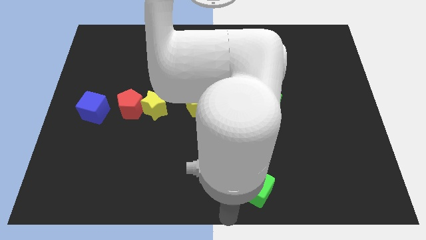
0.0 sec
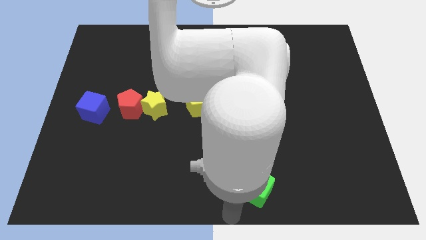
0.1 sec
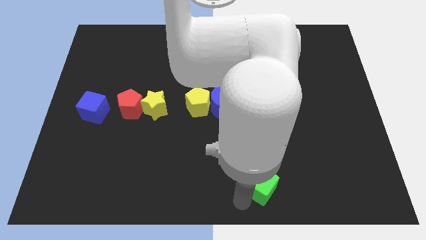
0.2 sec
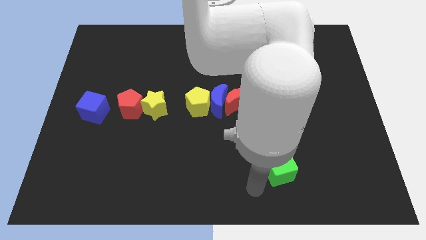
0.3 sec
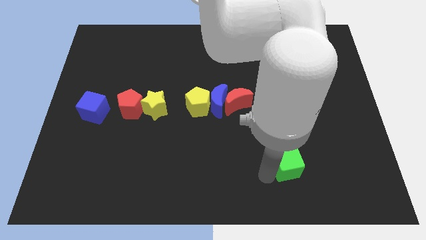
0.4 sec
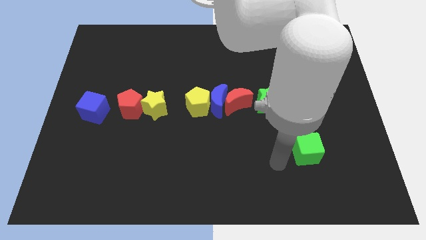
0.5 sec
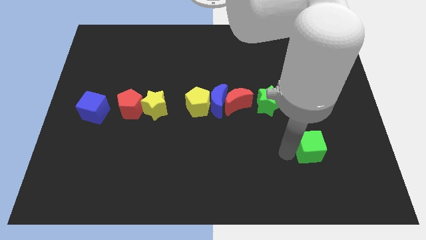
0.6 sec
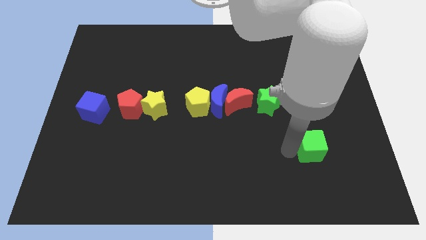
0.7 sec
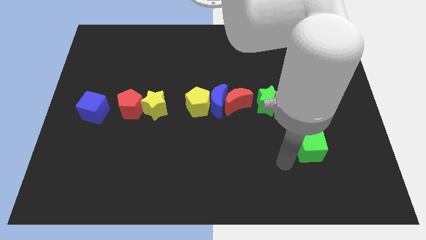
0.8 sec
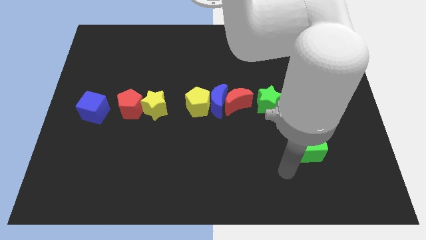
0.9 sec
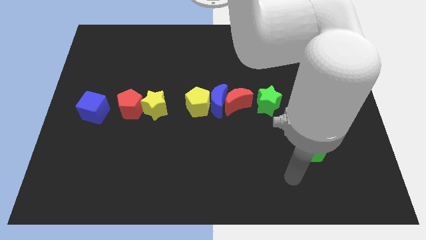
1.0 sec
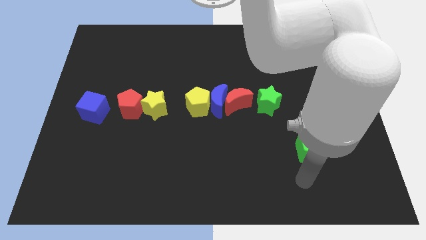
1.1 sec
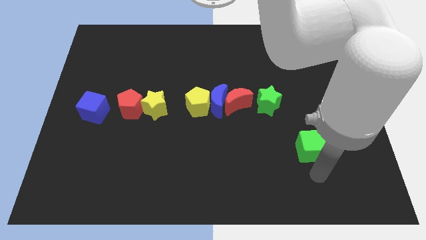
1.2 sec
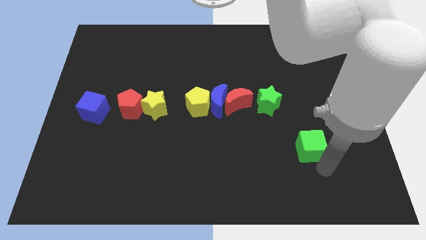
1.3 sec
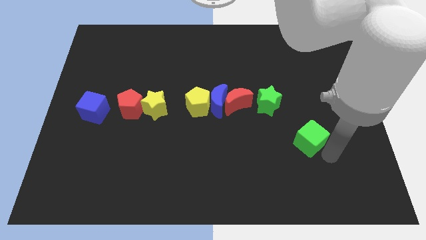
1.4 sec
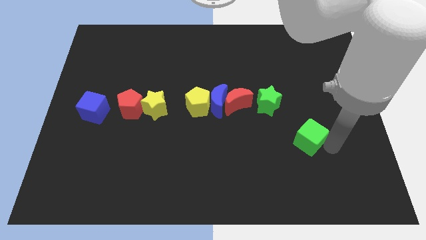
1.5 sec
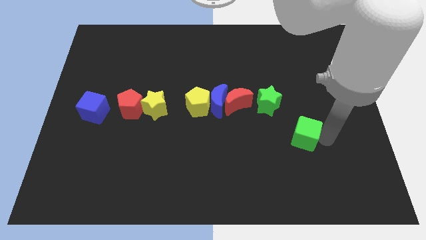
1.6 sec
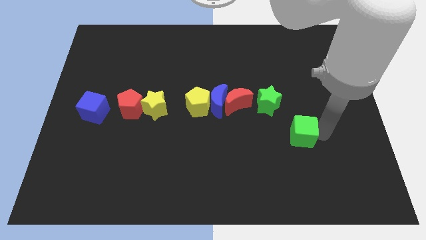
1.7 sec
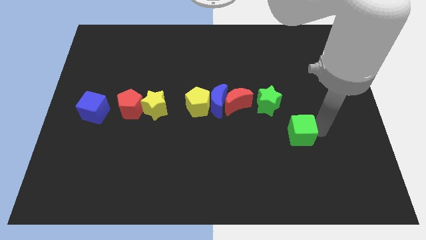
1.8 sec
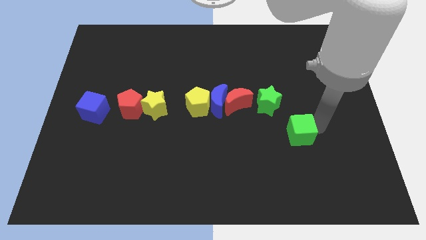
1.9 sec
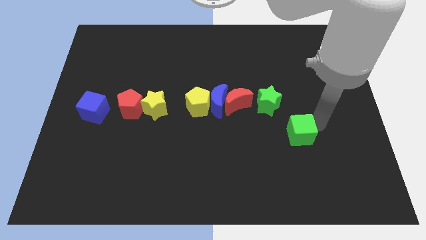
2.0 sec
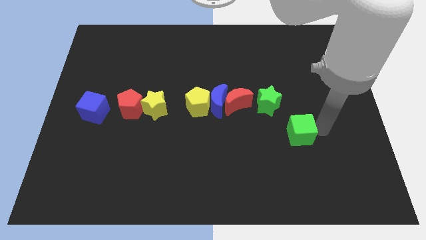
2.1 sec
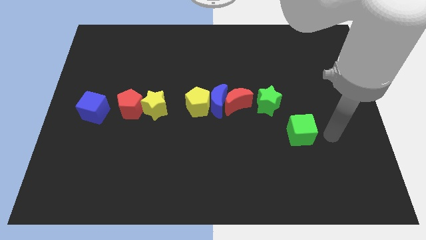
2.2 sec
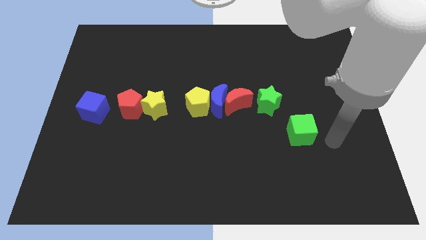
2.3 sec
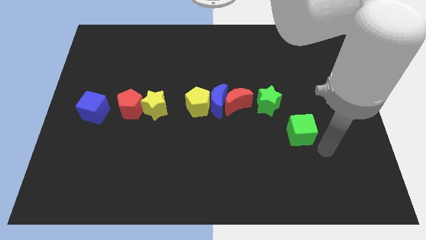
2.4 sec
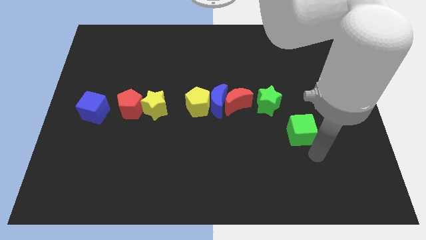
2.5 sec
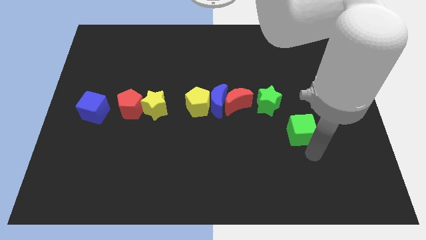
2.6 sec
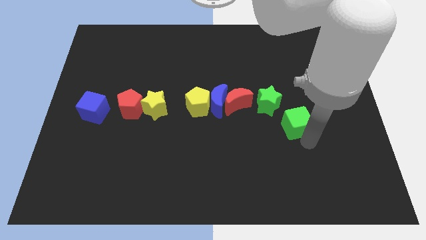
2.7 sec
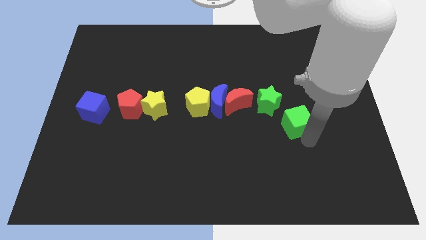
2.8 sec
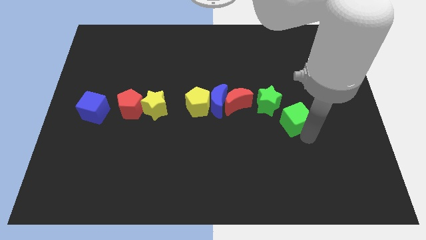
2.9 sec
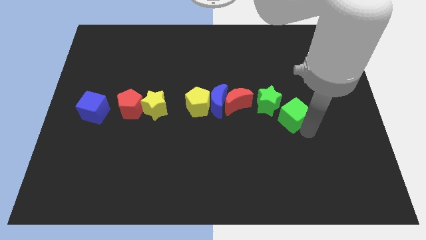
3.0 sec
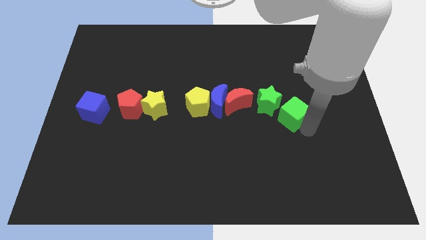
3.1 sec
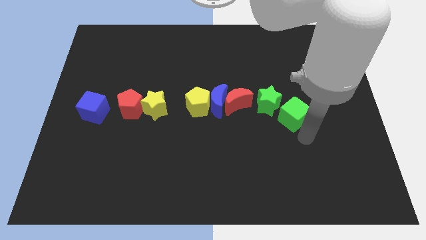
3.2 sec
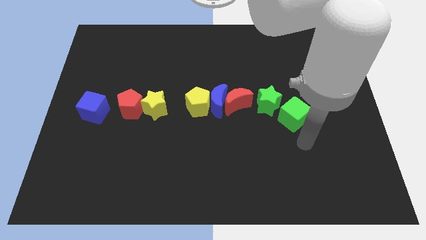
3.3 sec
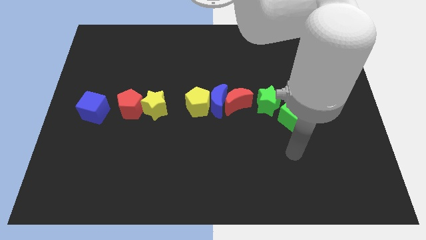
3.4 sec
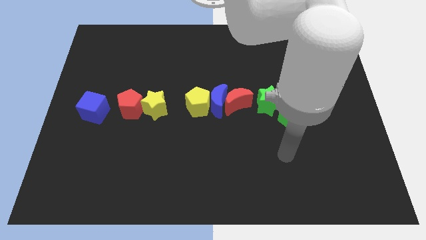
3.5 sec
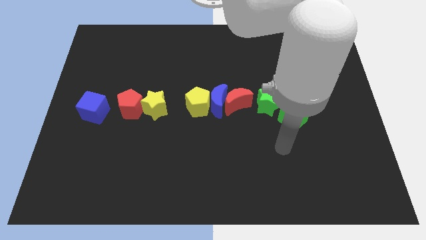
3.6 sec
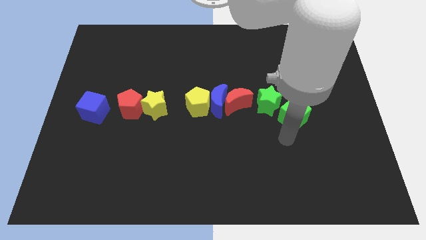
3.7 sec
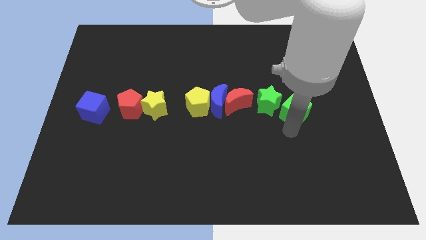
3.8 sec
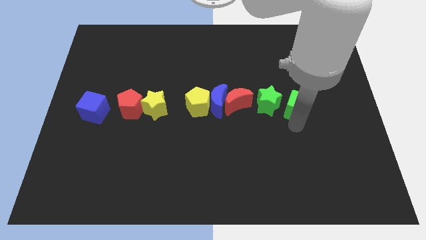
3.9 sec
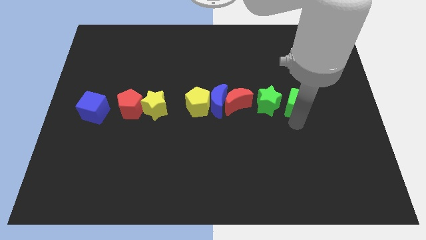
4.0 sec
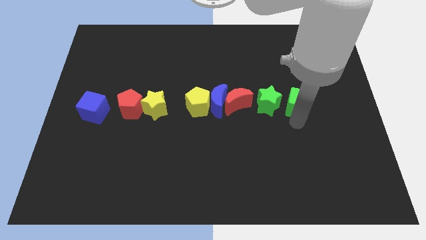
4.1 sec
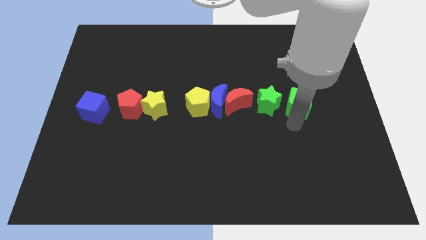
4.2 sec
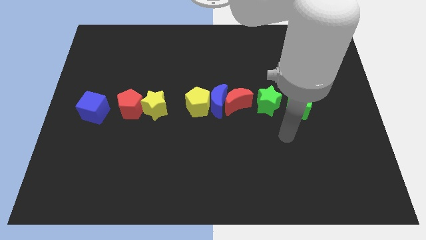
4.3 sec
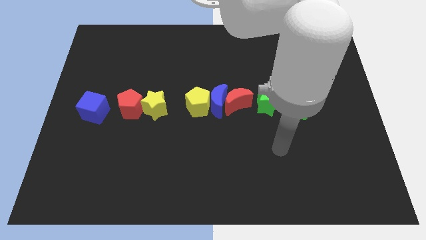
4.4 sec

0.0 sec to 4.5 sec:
place the green cube right to the green star to form a horizontal line

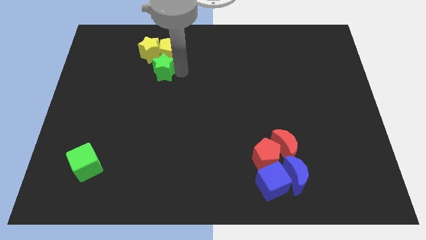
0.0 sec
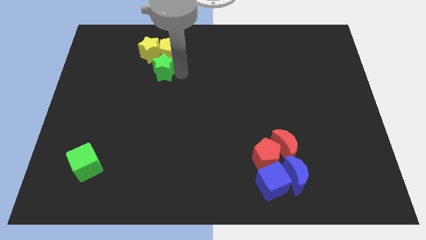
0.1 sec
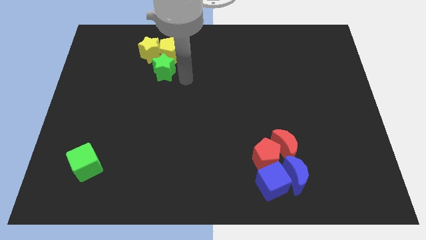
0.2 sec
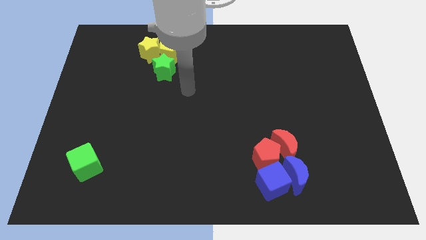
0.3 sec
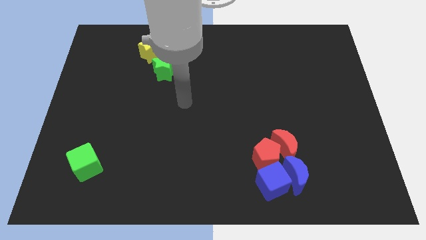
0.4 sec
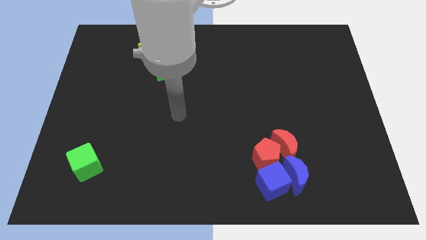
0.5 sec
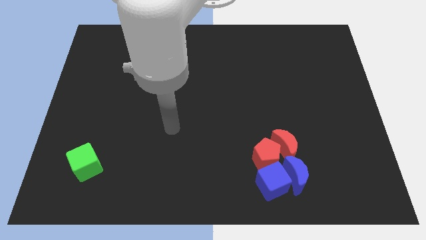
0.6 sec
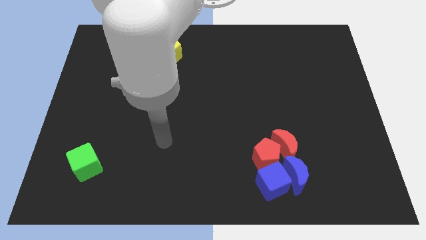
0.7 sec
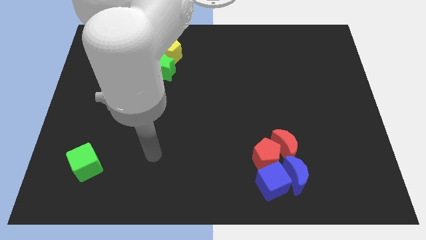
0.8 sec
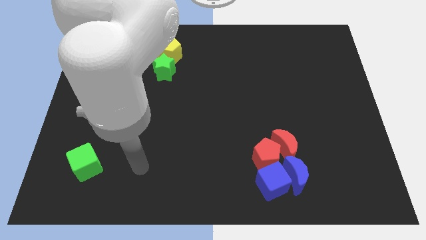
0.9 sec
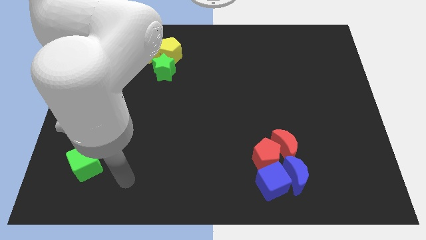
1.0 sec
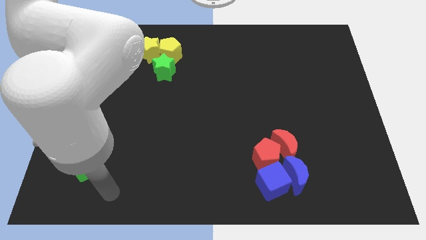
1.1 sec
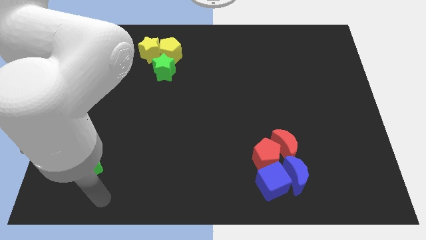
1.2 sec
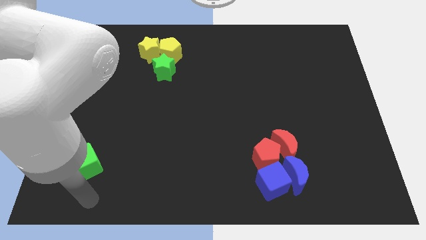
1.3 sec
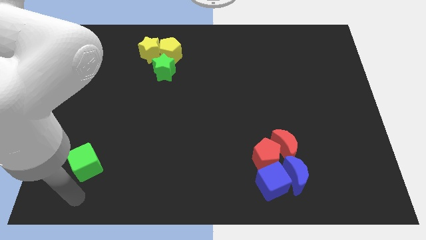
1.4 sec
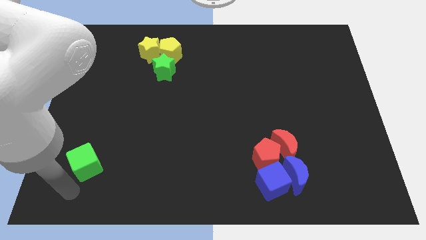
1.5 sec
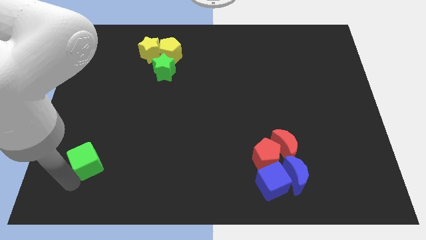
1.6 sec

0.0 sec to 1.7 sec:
point your arm below green cube

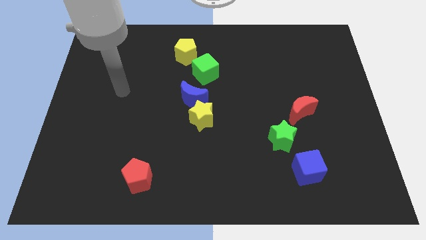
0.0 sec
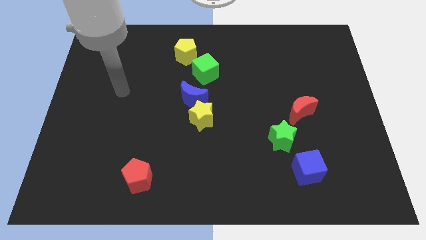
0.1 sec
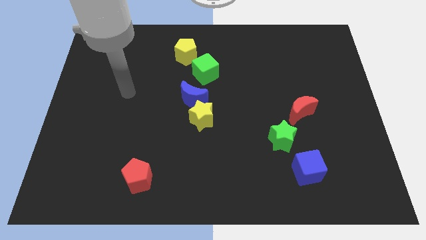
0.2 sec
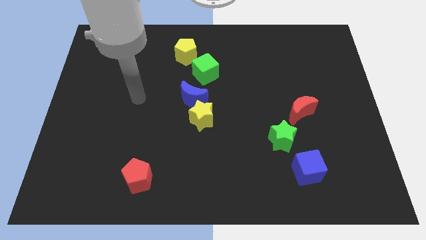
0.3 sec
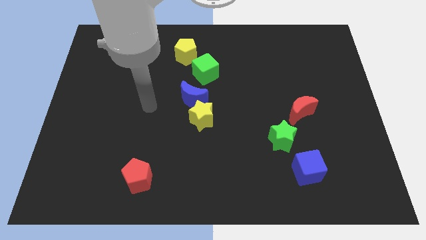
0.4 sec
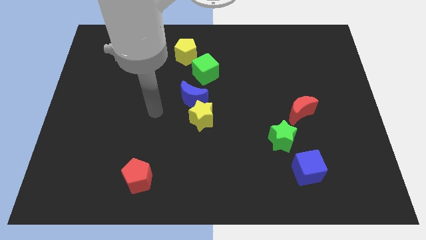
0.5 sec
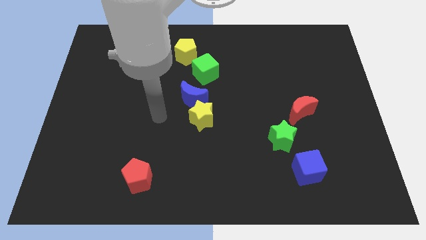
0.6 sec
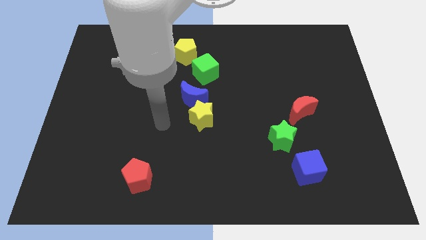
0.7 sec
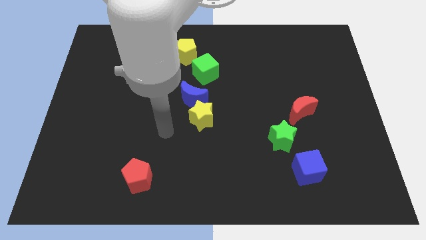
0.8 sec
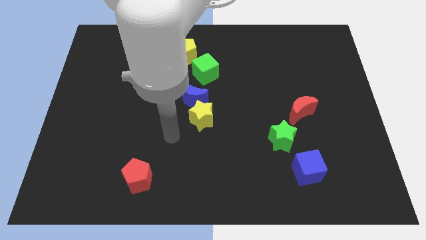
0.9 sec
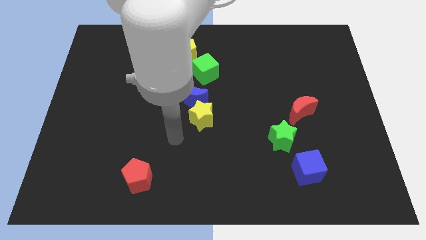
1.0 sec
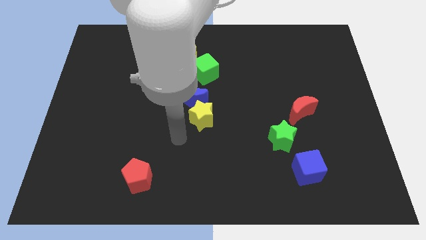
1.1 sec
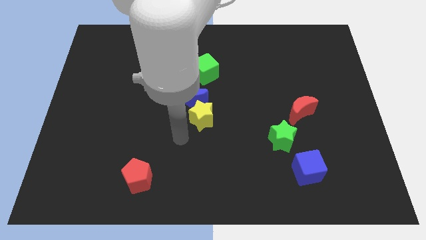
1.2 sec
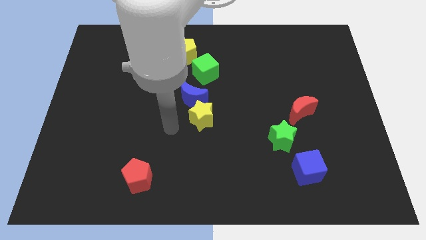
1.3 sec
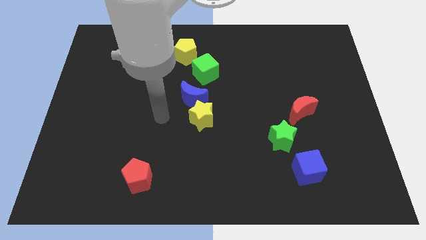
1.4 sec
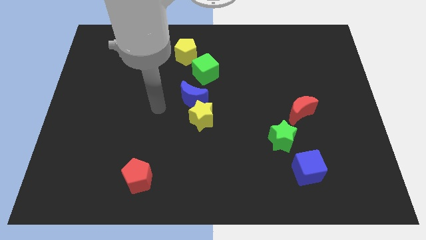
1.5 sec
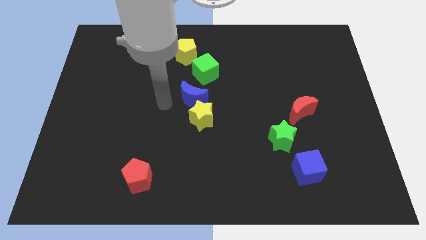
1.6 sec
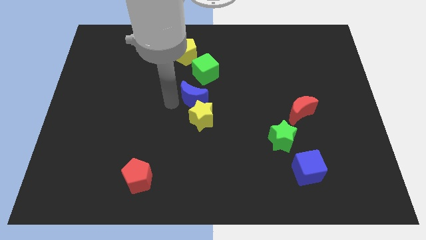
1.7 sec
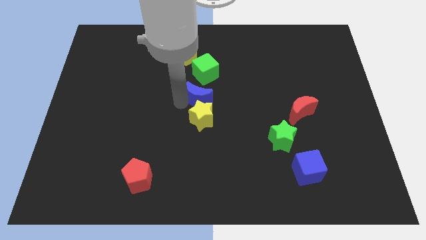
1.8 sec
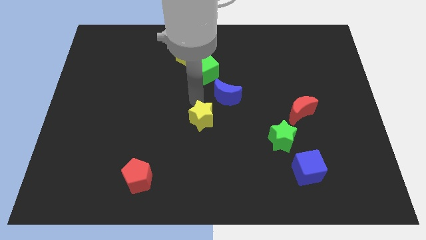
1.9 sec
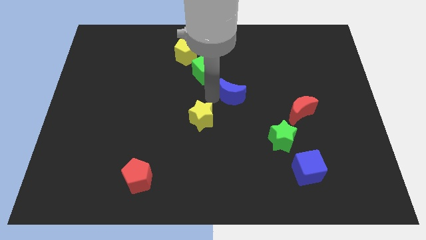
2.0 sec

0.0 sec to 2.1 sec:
move the blue crescent to the top right of yellow star

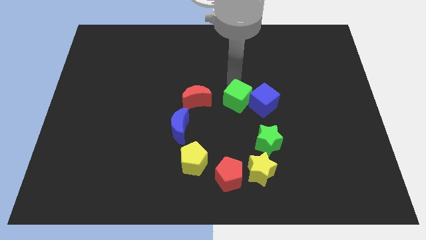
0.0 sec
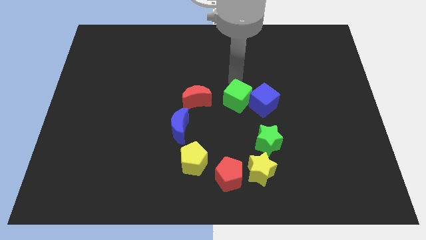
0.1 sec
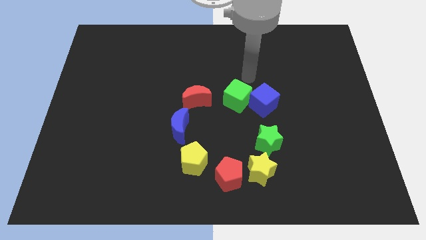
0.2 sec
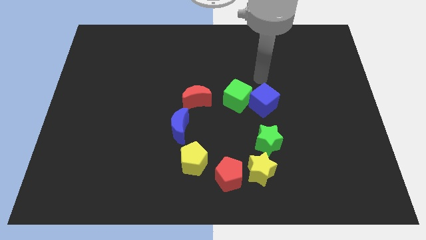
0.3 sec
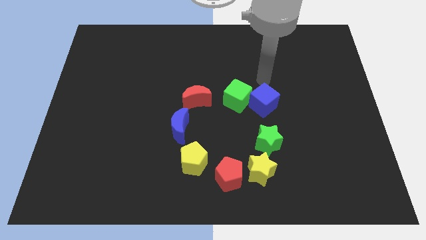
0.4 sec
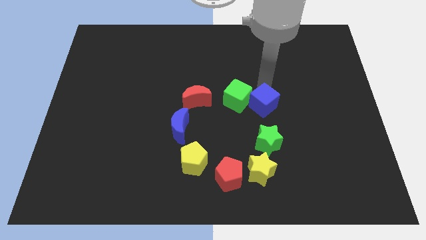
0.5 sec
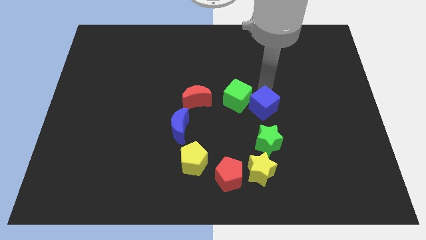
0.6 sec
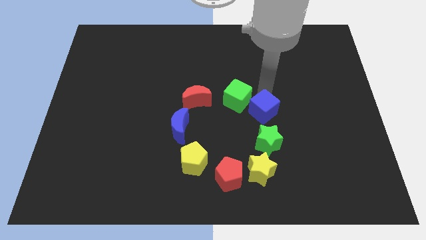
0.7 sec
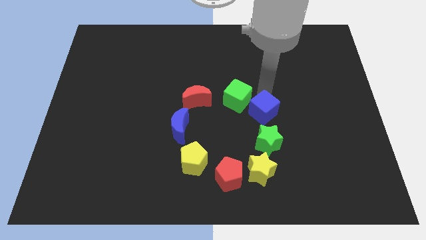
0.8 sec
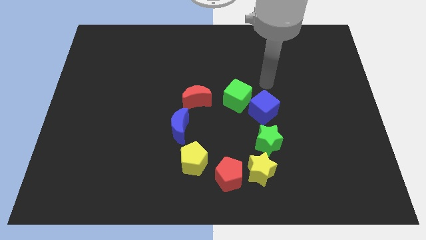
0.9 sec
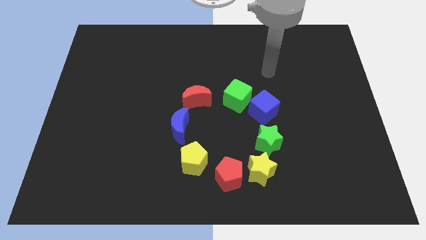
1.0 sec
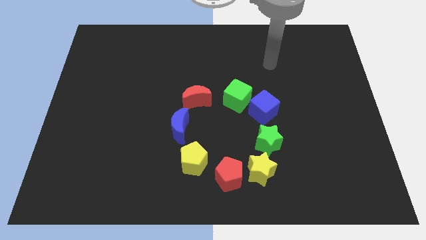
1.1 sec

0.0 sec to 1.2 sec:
slightly adjust the blue cube to make circle with the group of blocks
